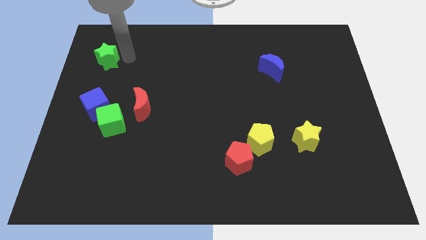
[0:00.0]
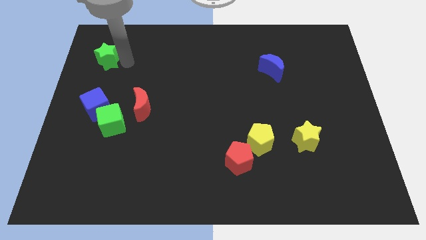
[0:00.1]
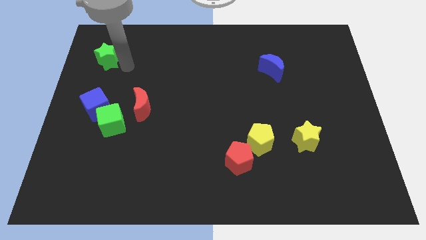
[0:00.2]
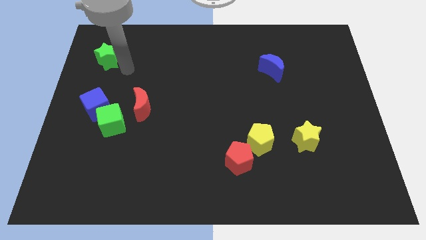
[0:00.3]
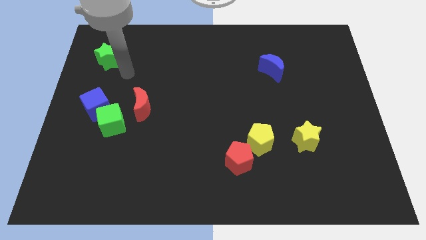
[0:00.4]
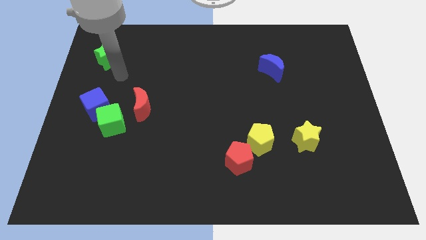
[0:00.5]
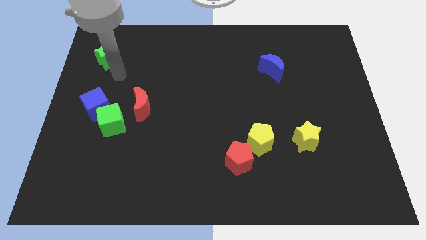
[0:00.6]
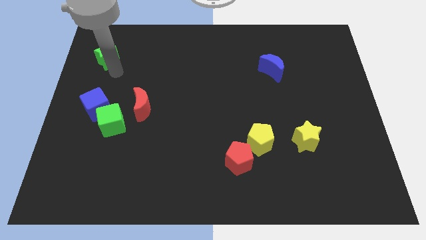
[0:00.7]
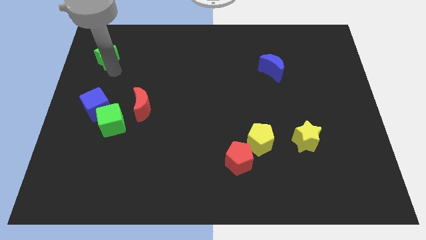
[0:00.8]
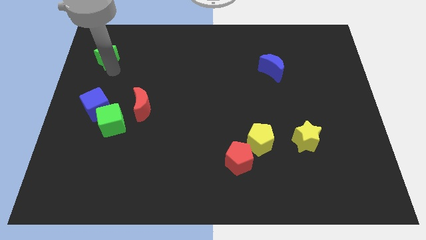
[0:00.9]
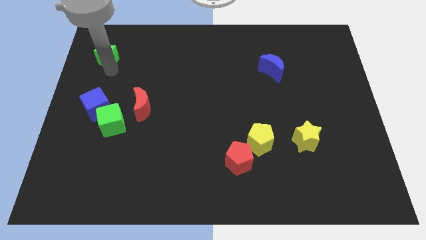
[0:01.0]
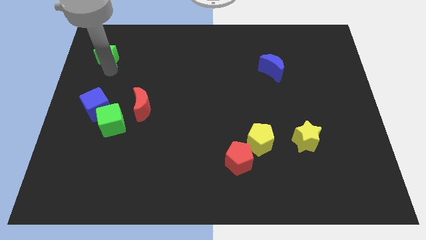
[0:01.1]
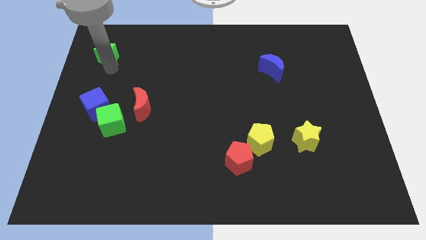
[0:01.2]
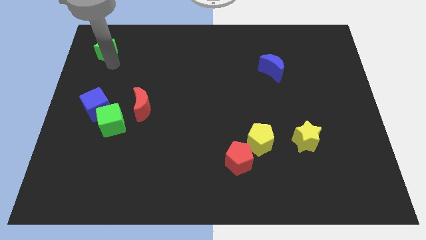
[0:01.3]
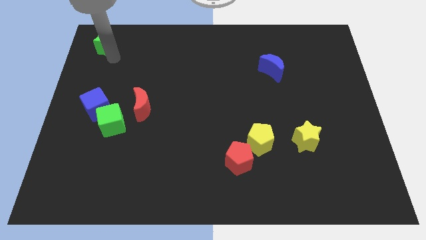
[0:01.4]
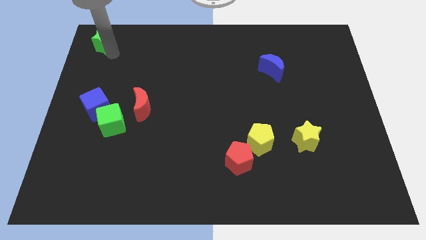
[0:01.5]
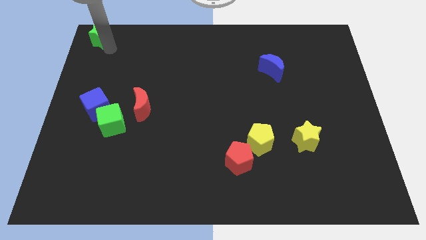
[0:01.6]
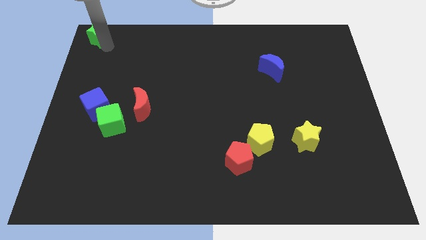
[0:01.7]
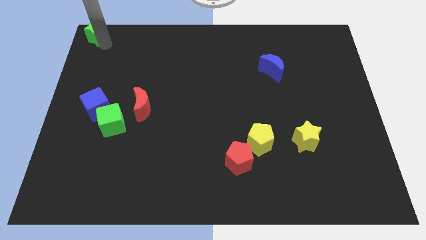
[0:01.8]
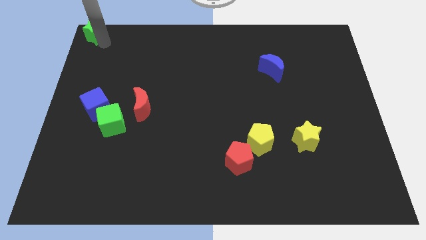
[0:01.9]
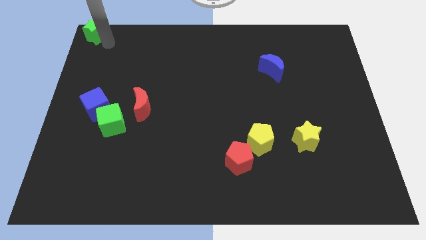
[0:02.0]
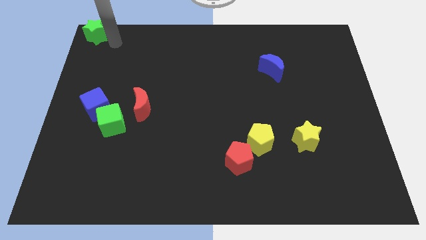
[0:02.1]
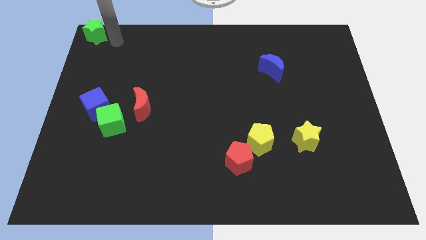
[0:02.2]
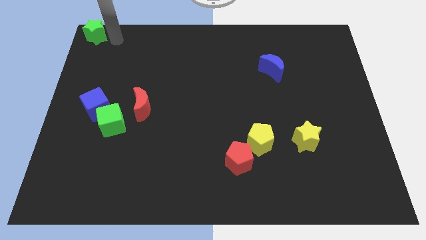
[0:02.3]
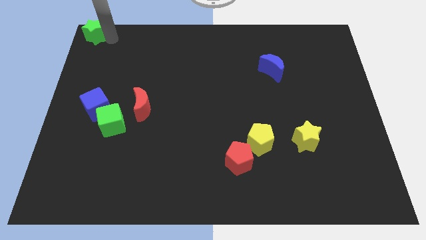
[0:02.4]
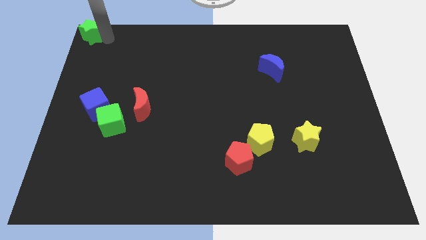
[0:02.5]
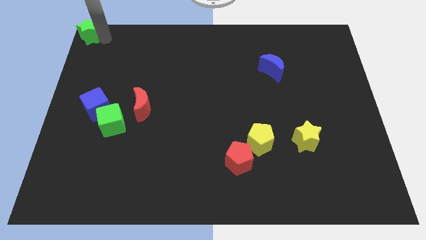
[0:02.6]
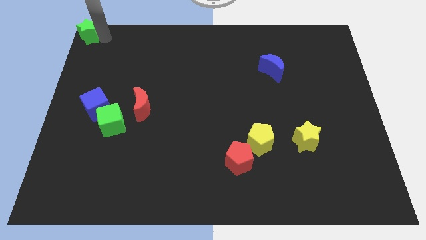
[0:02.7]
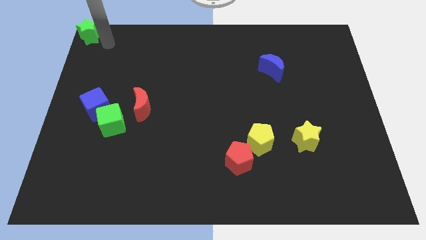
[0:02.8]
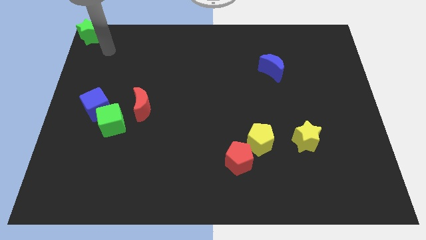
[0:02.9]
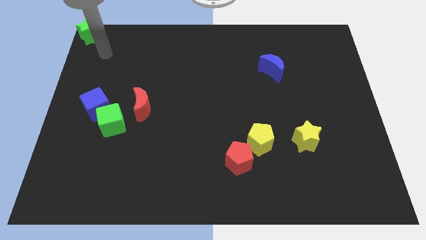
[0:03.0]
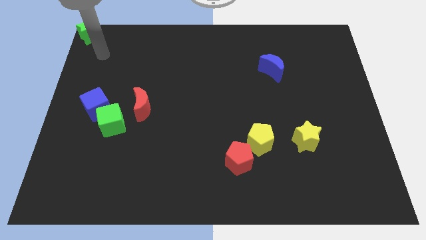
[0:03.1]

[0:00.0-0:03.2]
put the green star at the top left corner of the board

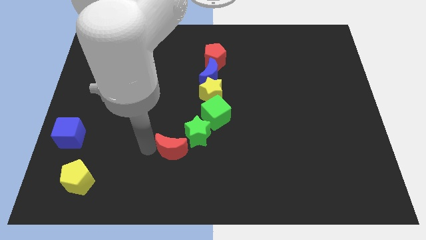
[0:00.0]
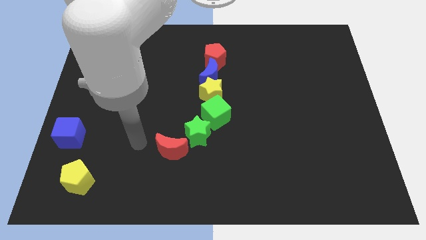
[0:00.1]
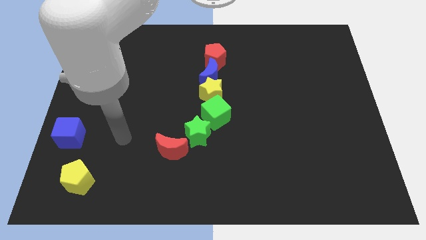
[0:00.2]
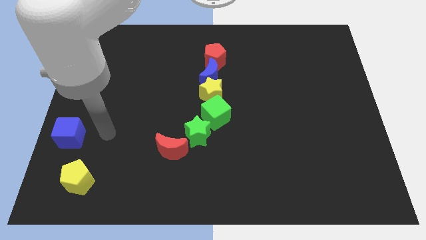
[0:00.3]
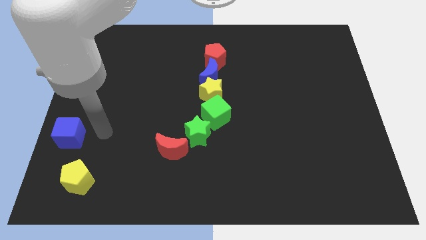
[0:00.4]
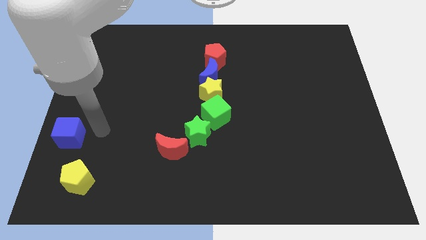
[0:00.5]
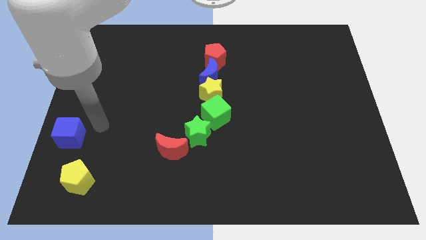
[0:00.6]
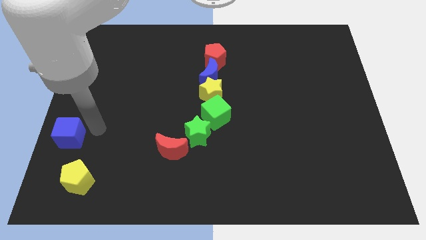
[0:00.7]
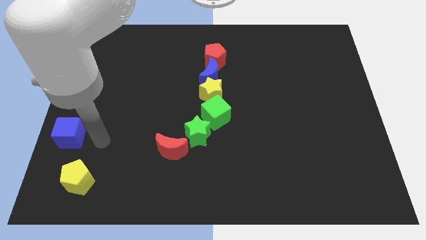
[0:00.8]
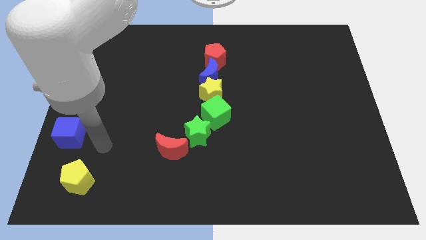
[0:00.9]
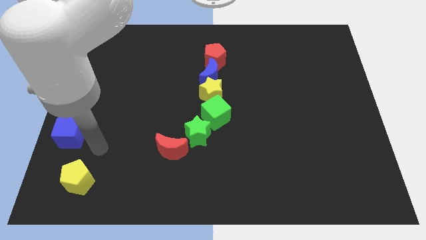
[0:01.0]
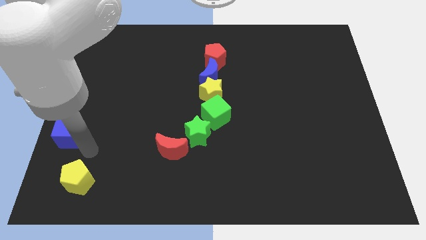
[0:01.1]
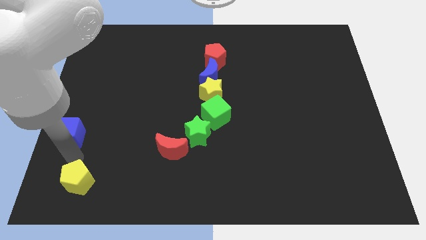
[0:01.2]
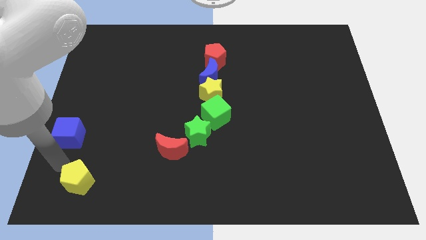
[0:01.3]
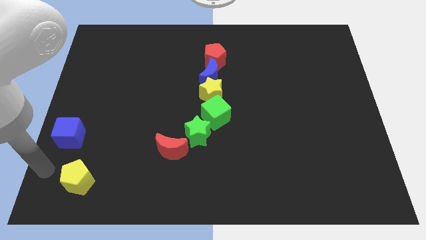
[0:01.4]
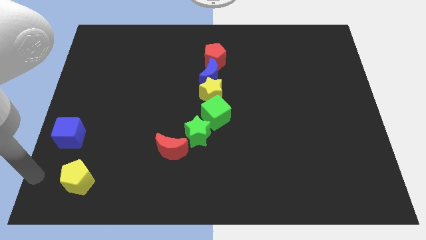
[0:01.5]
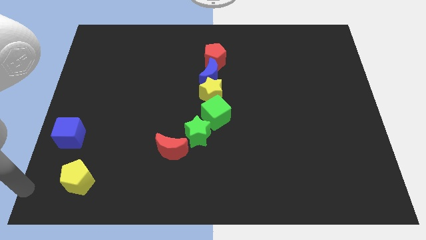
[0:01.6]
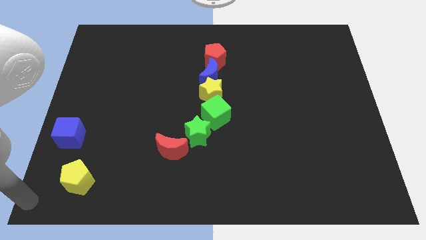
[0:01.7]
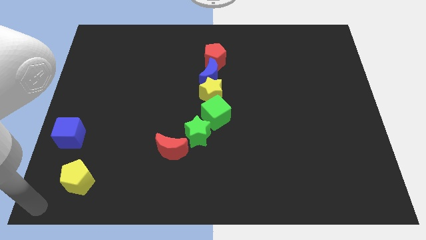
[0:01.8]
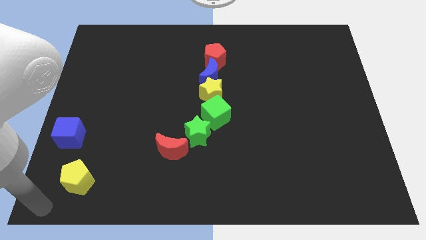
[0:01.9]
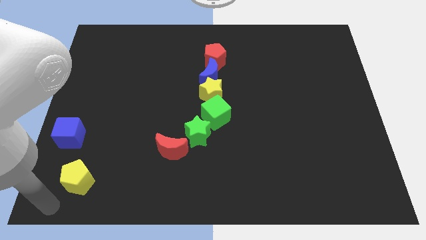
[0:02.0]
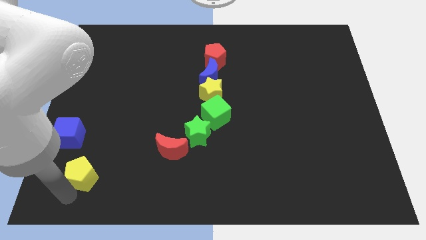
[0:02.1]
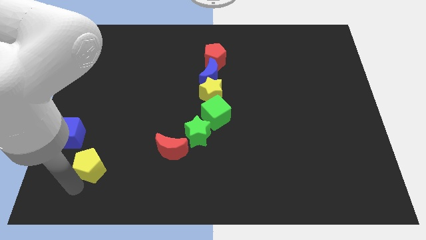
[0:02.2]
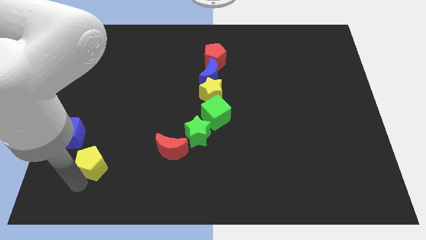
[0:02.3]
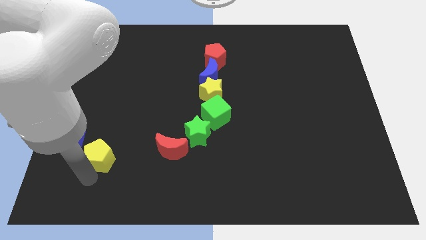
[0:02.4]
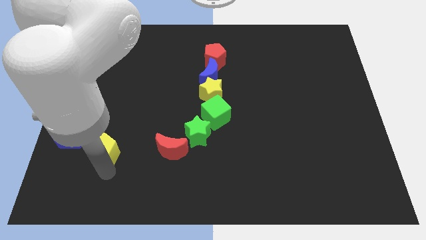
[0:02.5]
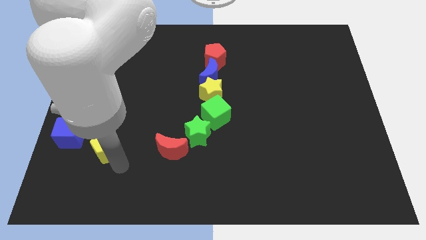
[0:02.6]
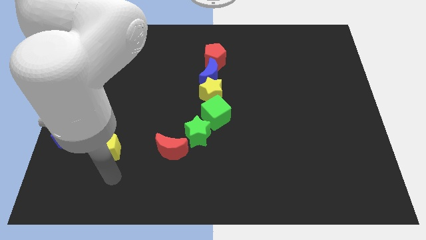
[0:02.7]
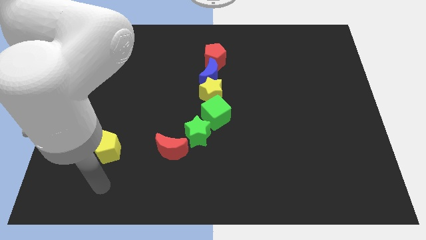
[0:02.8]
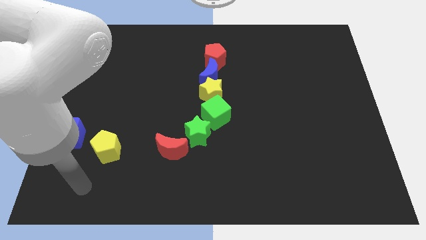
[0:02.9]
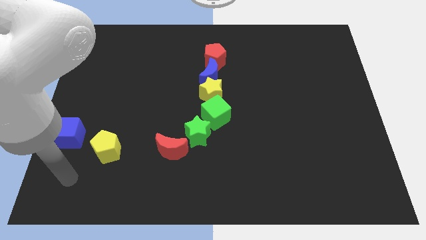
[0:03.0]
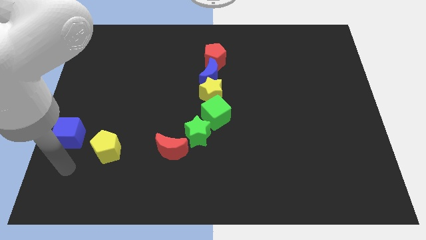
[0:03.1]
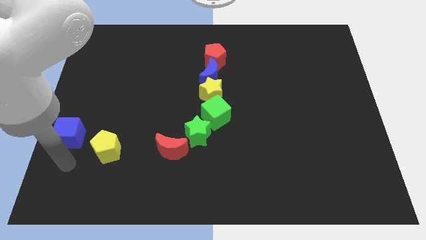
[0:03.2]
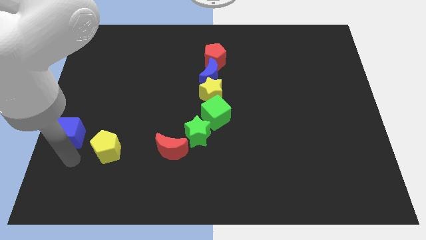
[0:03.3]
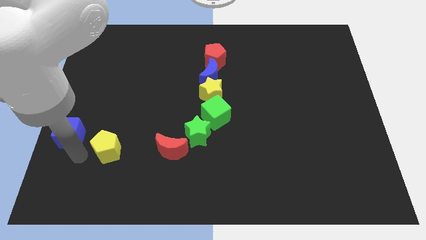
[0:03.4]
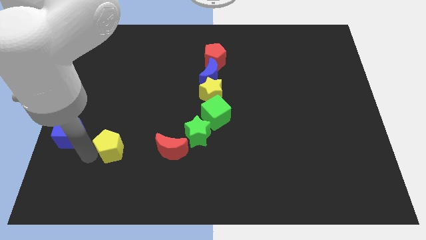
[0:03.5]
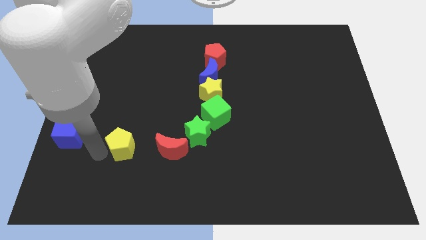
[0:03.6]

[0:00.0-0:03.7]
move yellow pentagon to the right of blue cube

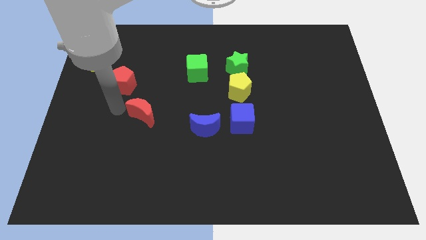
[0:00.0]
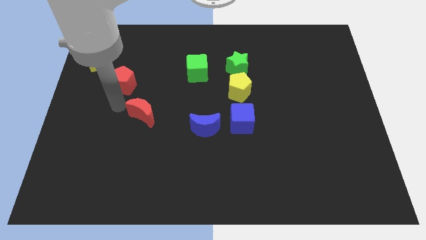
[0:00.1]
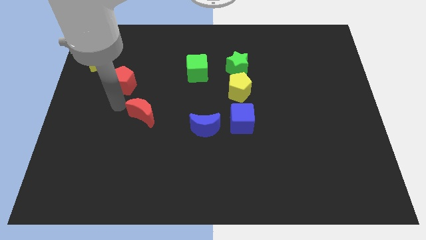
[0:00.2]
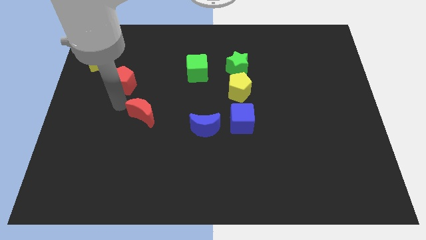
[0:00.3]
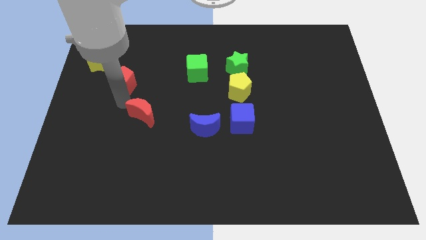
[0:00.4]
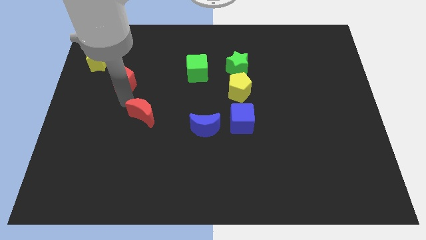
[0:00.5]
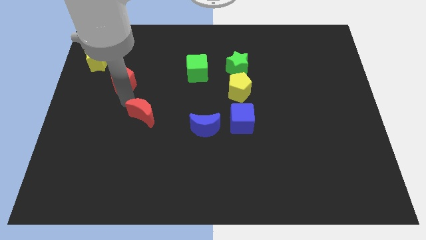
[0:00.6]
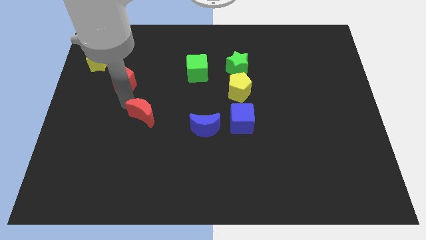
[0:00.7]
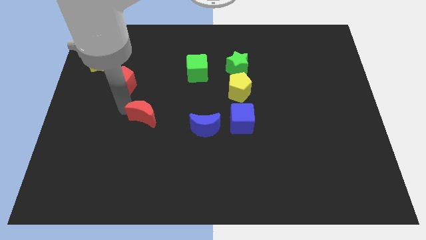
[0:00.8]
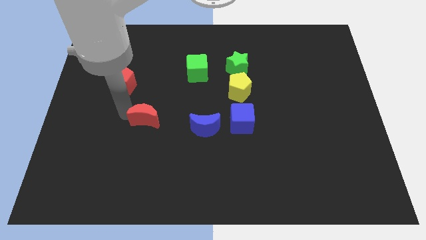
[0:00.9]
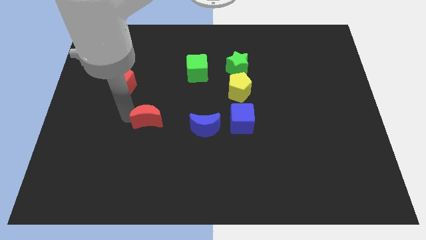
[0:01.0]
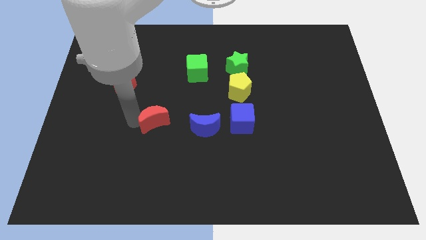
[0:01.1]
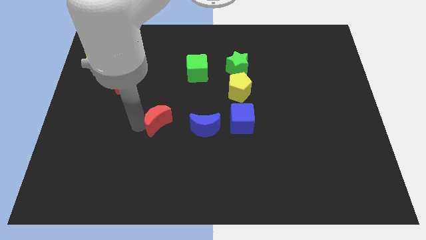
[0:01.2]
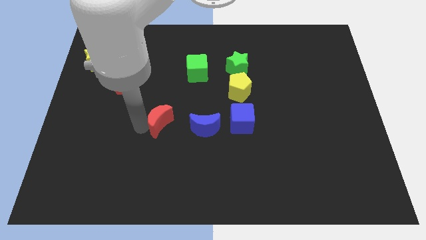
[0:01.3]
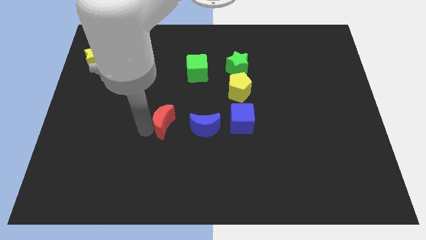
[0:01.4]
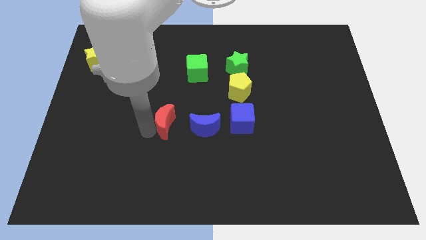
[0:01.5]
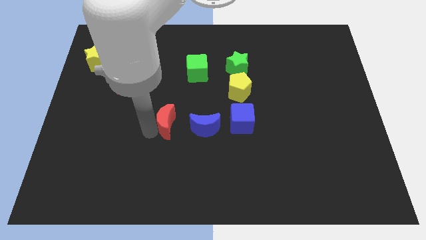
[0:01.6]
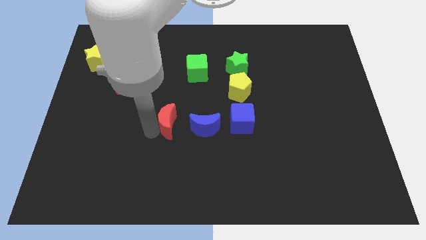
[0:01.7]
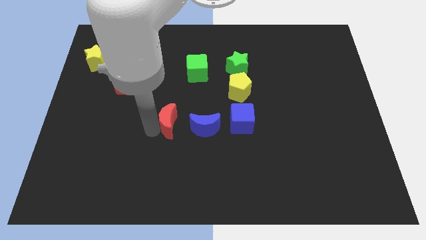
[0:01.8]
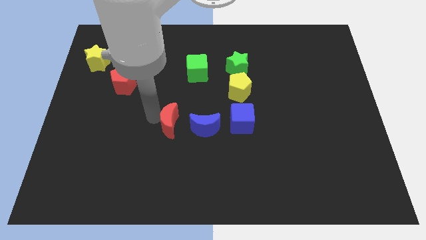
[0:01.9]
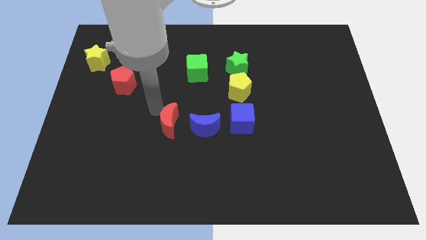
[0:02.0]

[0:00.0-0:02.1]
move the red crescent left to the blue crescent

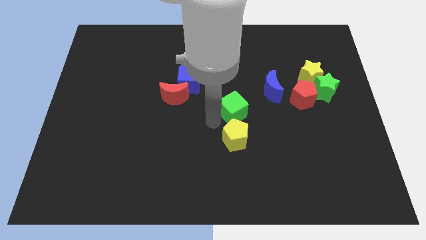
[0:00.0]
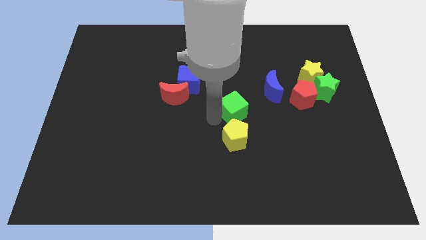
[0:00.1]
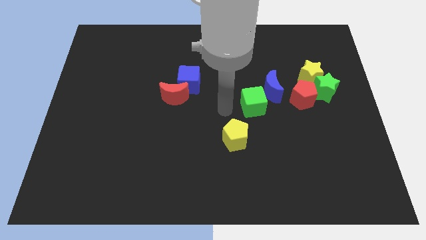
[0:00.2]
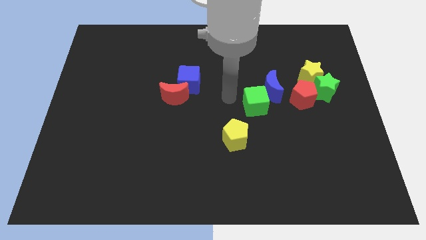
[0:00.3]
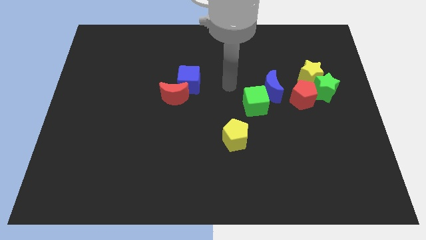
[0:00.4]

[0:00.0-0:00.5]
separate green cube and yellow pentagon
